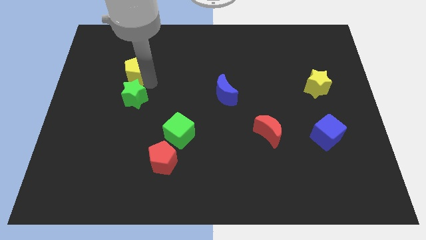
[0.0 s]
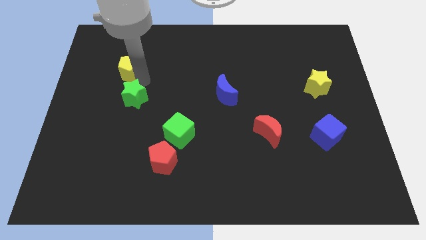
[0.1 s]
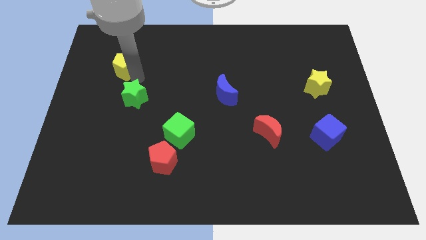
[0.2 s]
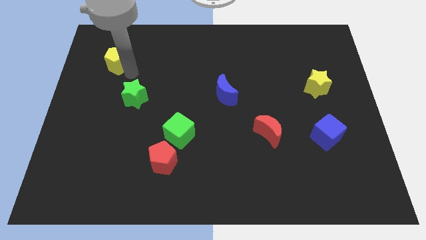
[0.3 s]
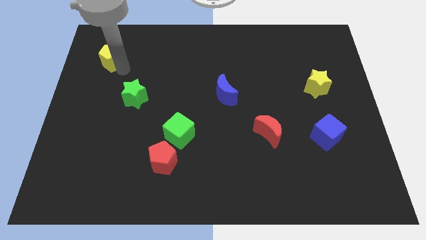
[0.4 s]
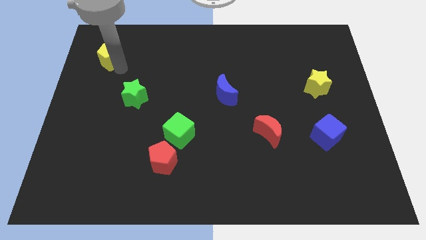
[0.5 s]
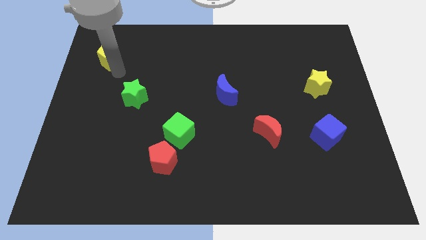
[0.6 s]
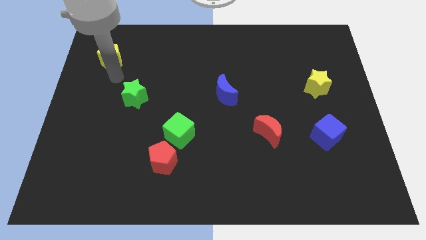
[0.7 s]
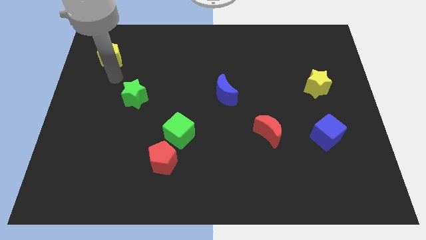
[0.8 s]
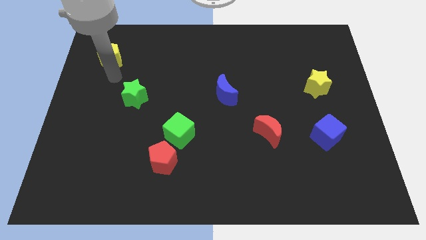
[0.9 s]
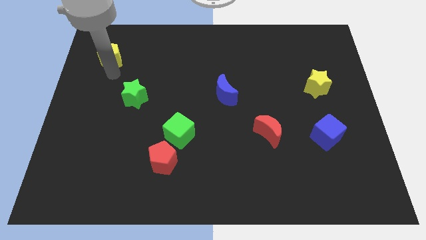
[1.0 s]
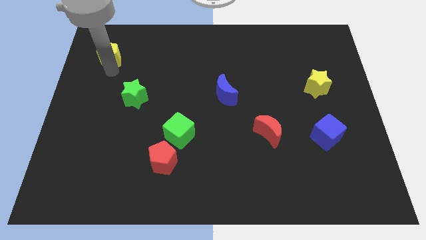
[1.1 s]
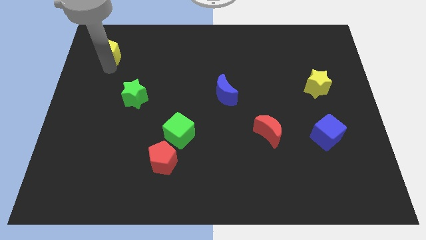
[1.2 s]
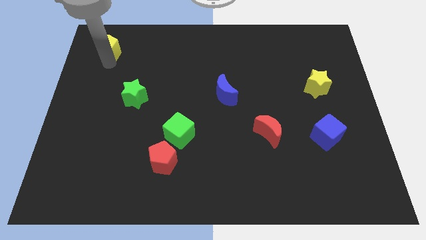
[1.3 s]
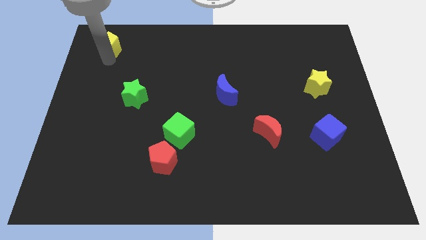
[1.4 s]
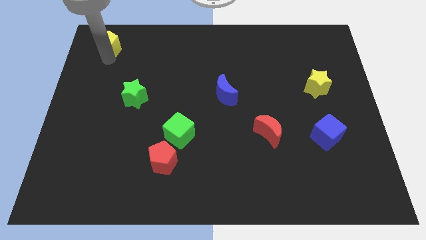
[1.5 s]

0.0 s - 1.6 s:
push the yellow pentagon away from the green star

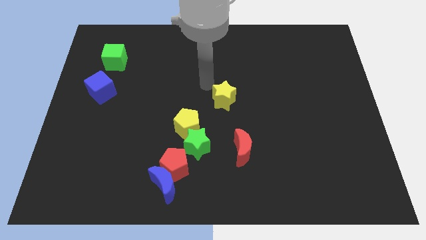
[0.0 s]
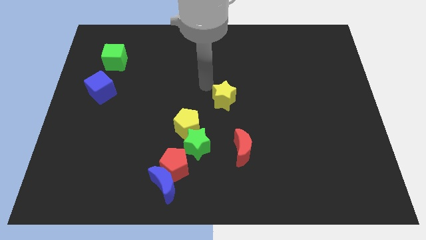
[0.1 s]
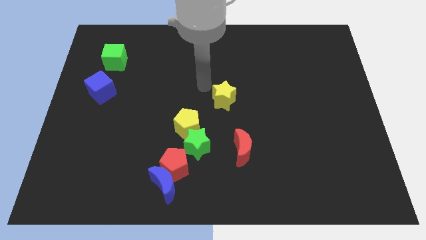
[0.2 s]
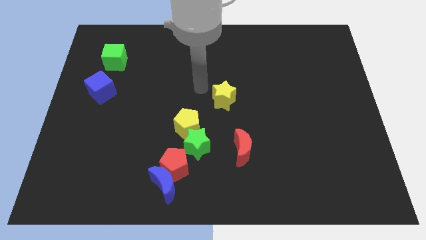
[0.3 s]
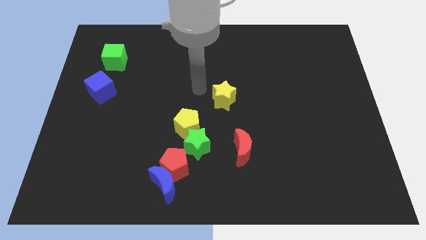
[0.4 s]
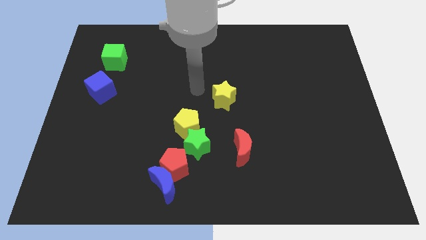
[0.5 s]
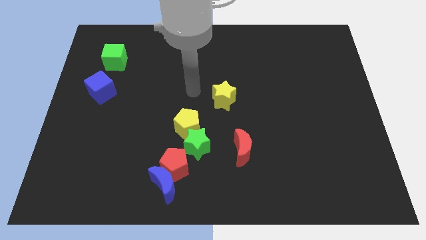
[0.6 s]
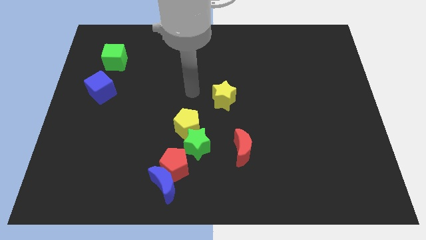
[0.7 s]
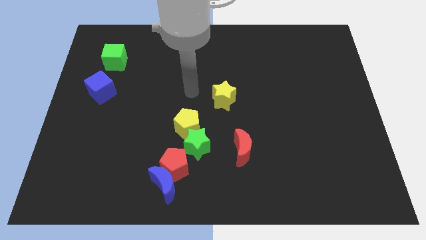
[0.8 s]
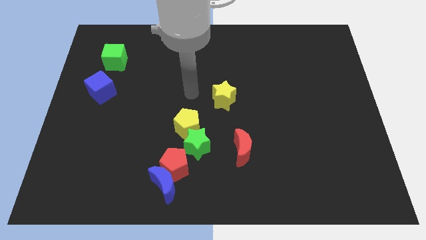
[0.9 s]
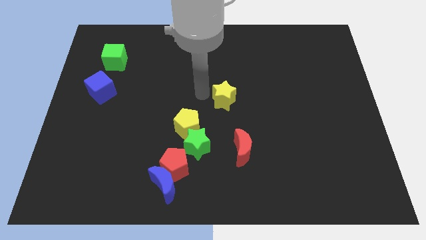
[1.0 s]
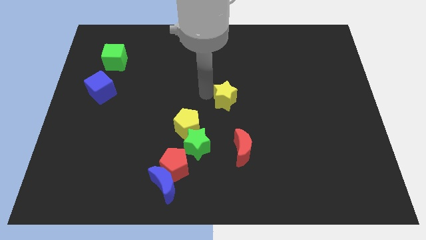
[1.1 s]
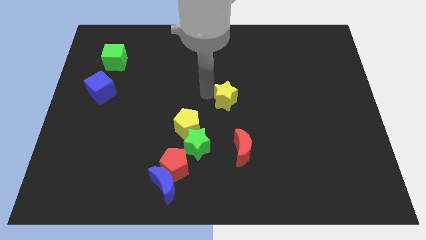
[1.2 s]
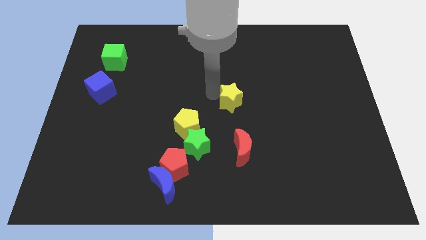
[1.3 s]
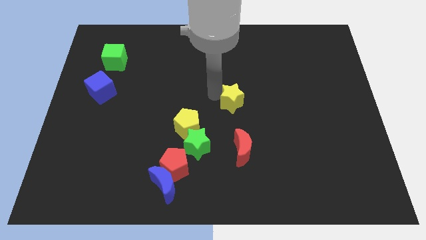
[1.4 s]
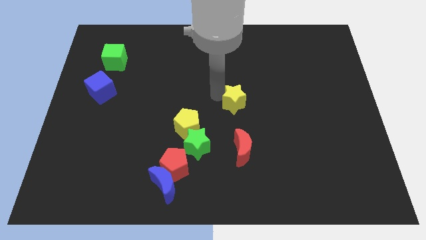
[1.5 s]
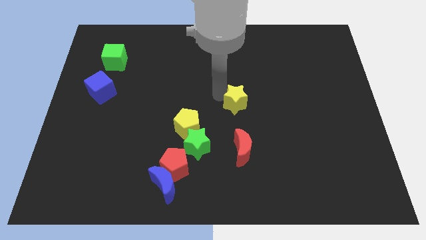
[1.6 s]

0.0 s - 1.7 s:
push the yellow star above the red crescent

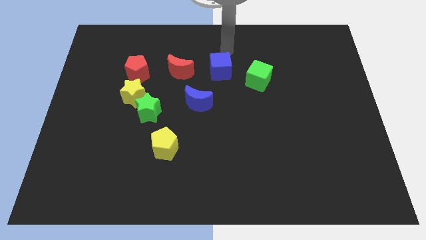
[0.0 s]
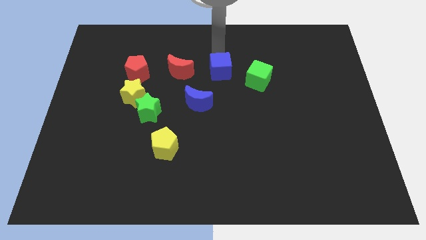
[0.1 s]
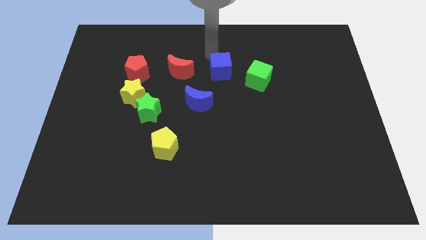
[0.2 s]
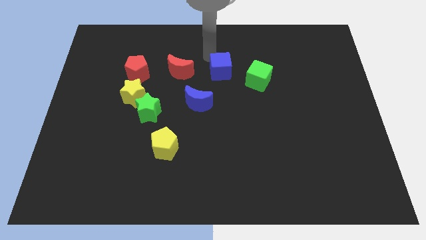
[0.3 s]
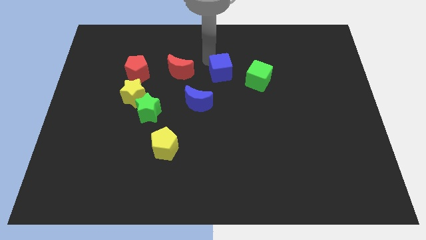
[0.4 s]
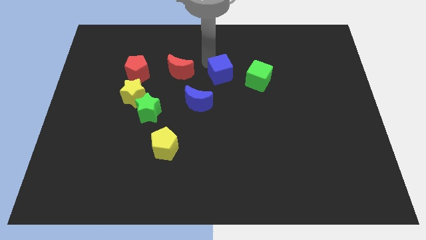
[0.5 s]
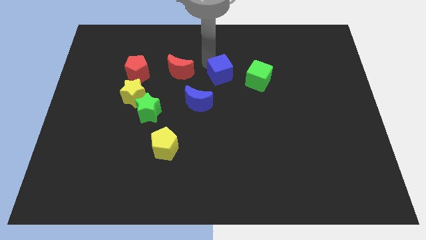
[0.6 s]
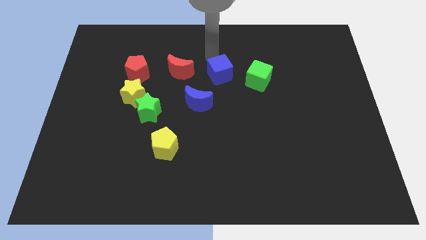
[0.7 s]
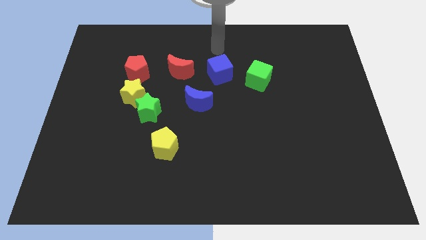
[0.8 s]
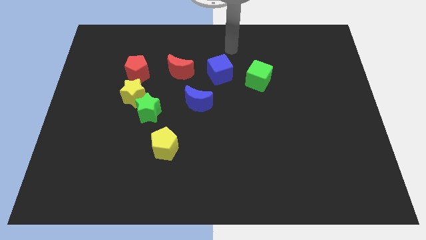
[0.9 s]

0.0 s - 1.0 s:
adjust the blue cube between red moon and the green cube

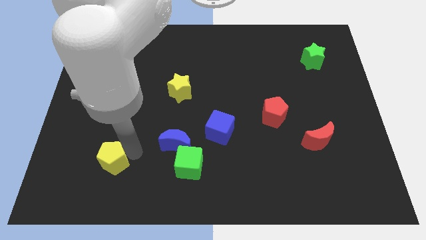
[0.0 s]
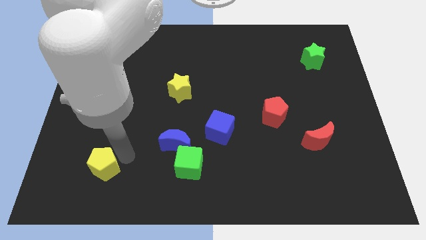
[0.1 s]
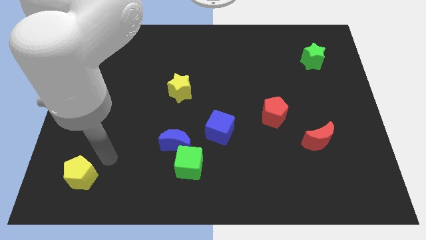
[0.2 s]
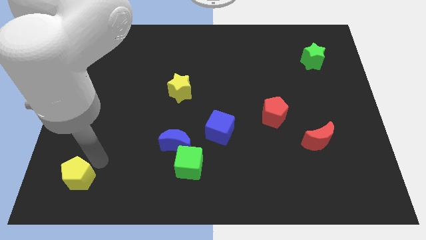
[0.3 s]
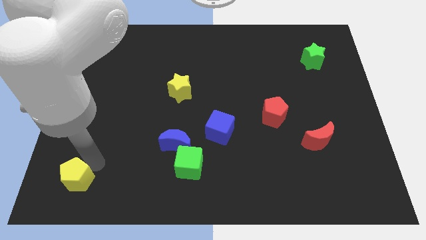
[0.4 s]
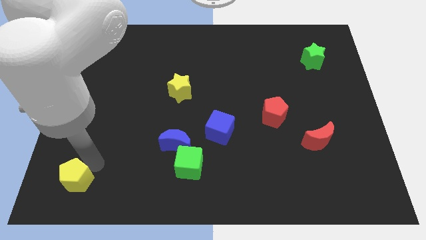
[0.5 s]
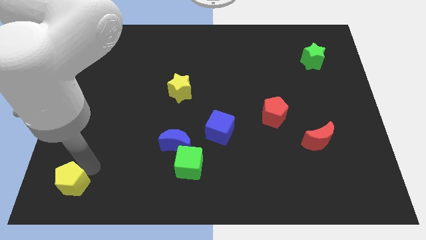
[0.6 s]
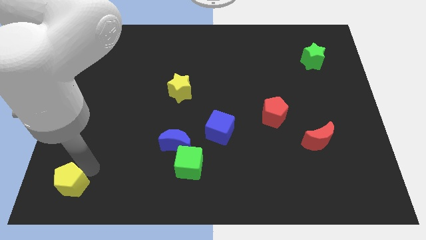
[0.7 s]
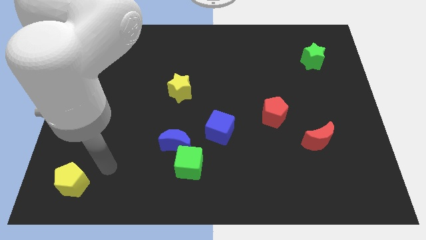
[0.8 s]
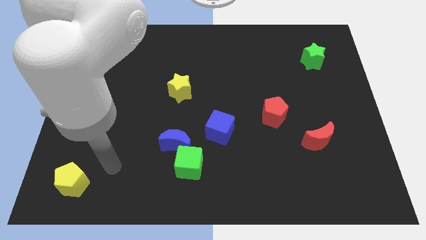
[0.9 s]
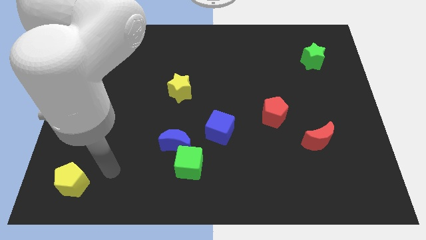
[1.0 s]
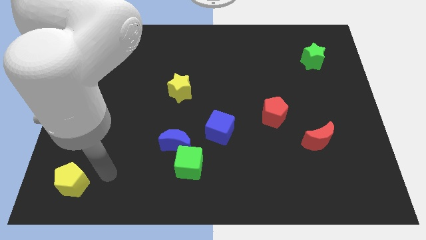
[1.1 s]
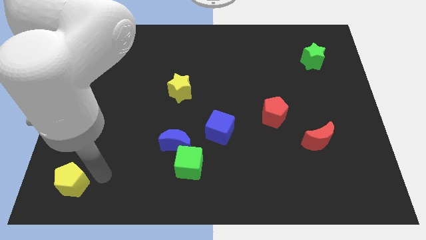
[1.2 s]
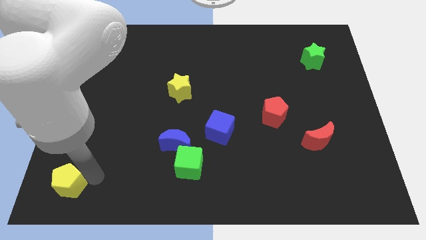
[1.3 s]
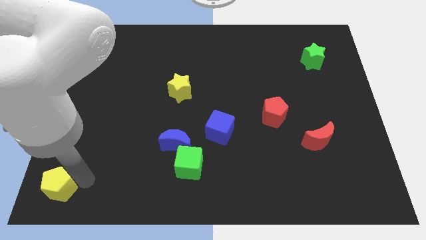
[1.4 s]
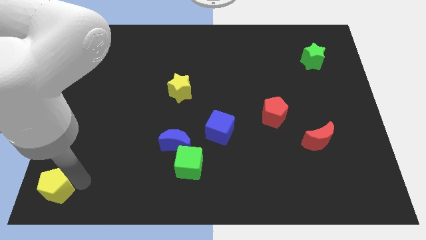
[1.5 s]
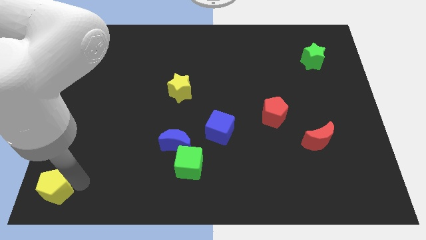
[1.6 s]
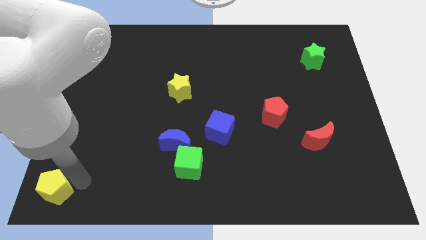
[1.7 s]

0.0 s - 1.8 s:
move yellow pentagon to the bottom left corner of the board

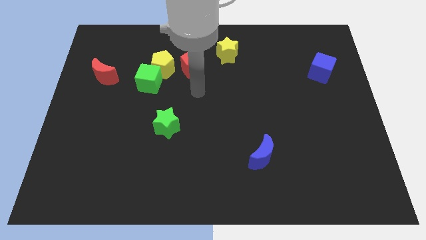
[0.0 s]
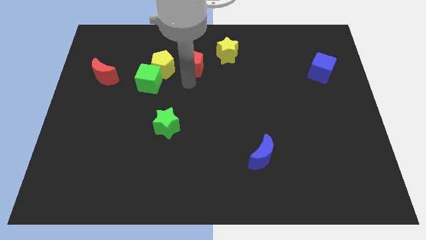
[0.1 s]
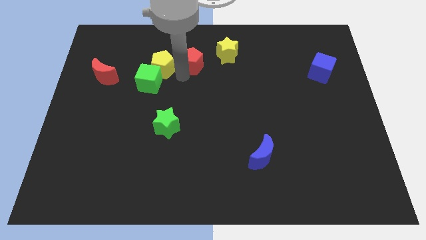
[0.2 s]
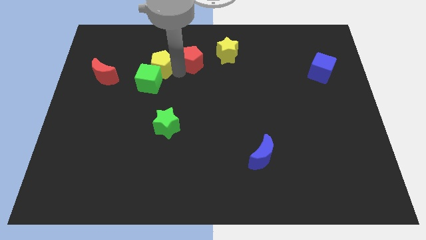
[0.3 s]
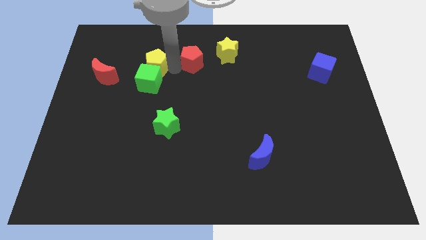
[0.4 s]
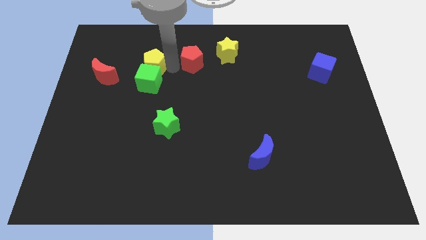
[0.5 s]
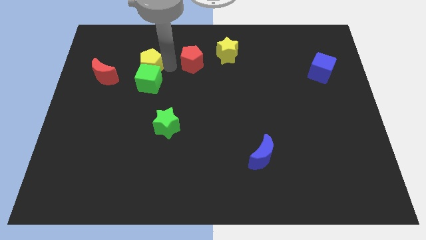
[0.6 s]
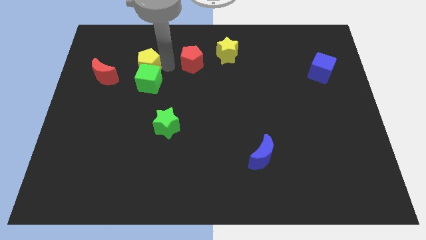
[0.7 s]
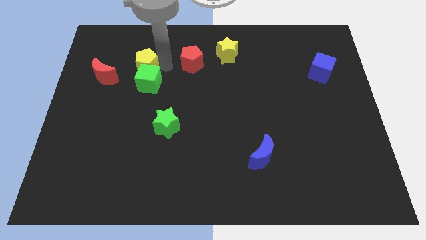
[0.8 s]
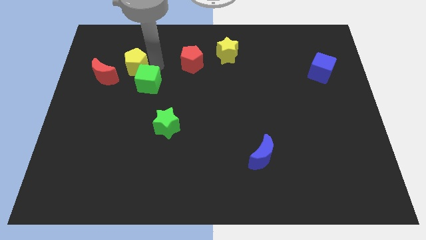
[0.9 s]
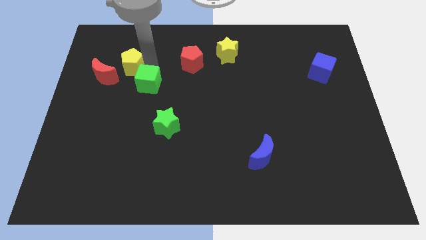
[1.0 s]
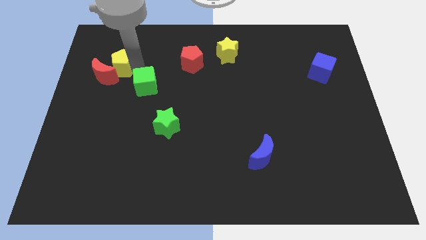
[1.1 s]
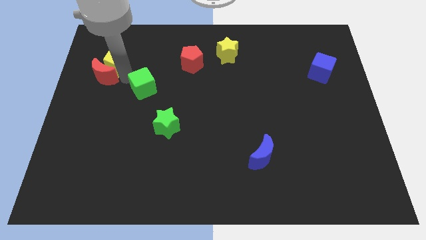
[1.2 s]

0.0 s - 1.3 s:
move the yellow pentagon towards the red crescent

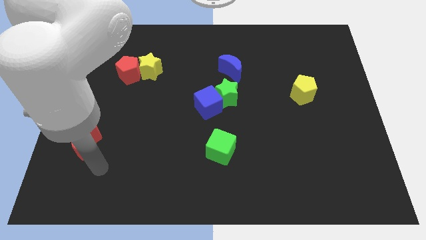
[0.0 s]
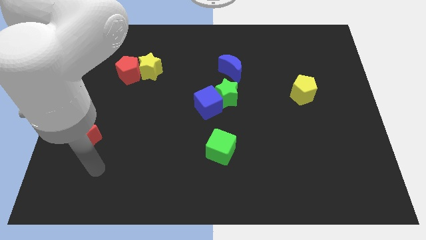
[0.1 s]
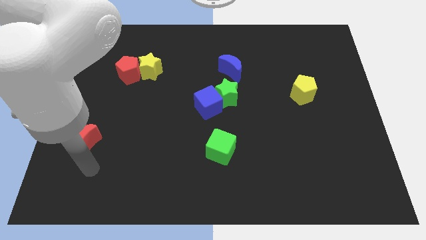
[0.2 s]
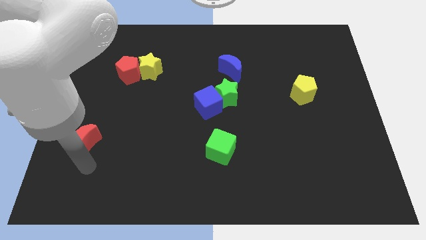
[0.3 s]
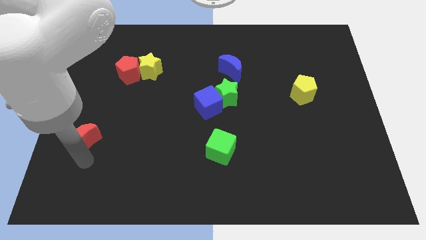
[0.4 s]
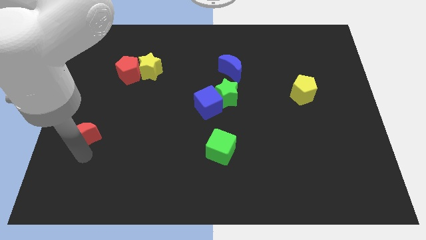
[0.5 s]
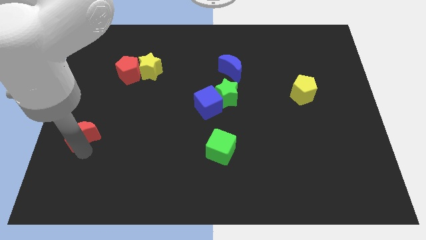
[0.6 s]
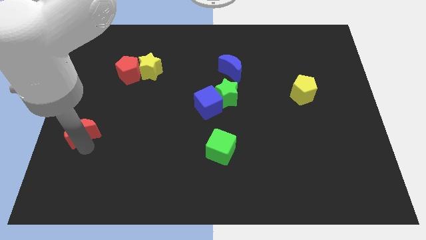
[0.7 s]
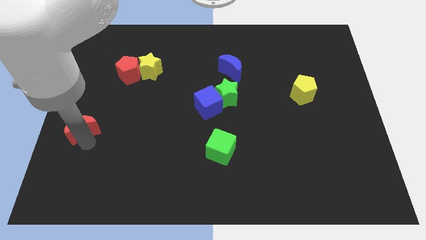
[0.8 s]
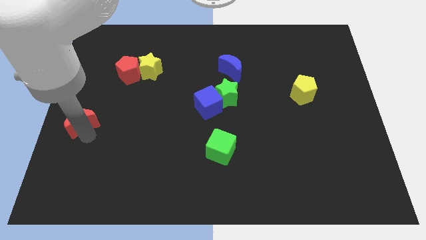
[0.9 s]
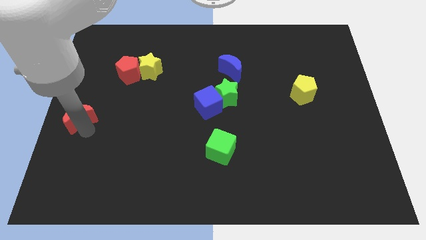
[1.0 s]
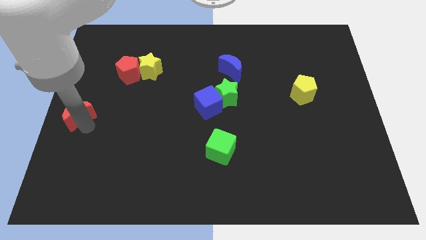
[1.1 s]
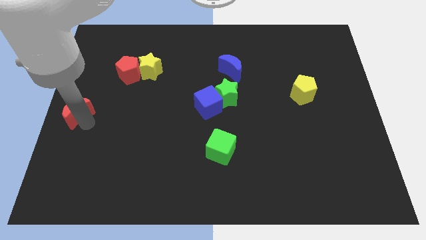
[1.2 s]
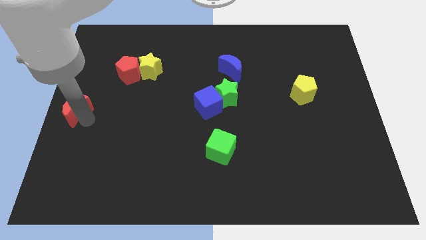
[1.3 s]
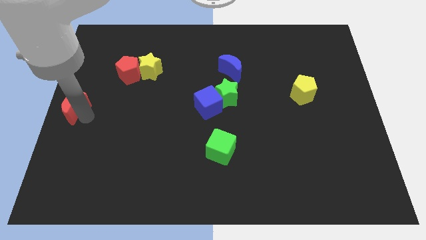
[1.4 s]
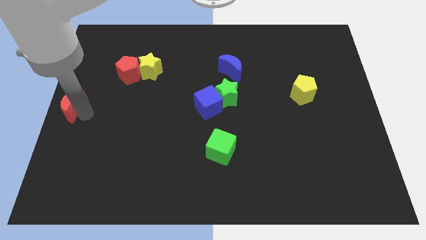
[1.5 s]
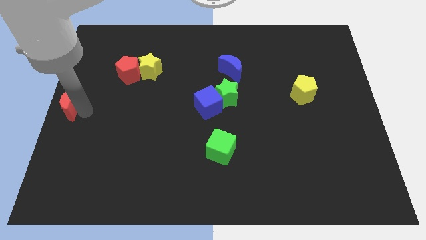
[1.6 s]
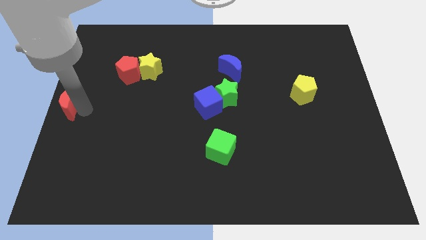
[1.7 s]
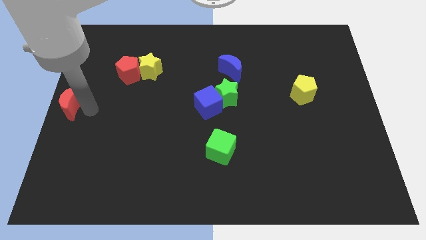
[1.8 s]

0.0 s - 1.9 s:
put the red crescent at the center left of the board
